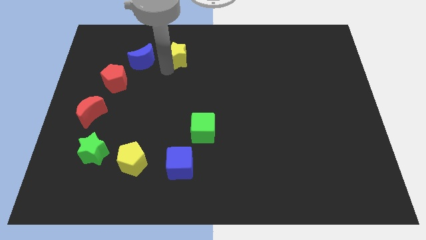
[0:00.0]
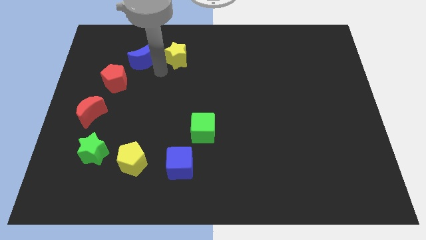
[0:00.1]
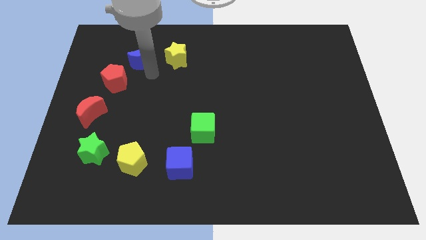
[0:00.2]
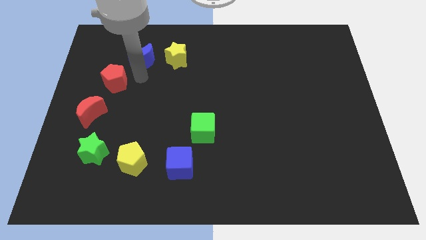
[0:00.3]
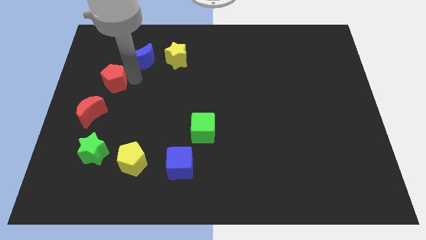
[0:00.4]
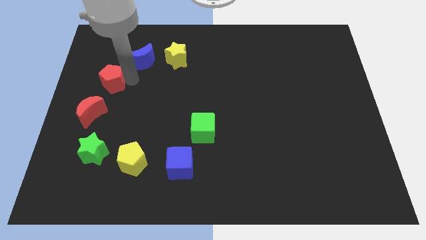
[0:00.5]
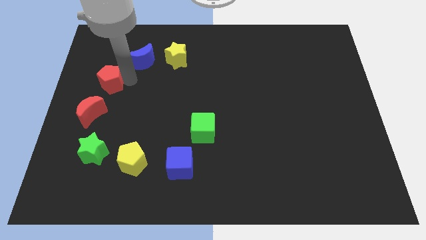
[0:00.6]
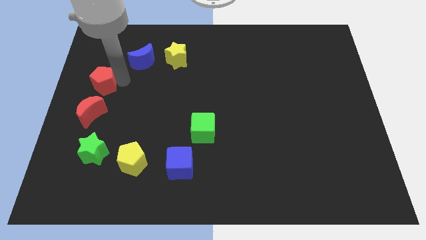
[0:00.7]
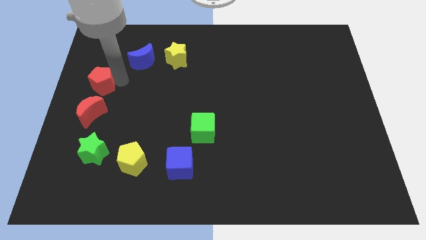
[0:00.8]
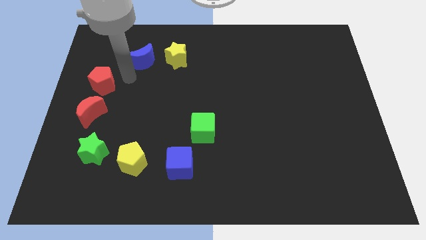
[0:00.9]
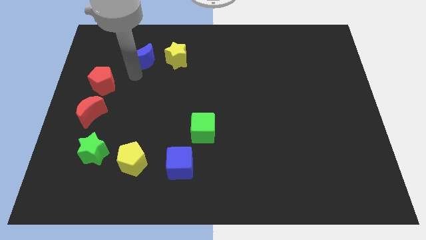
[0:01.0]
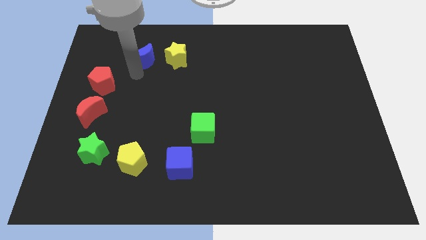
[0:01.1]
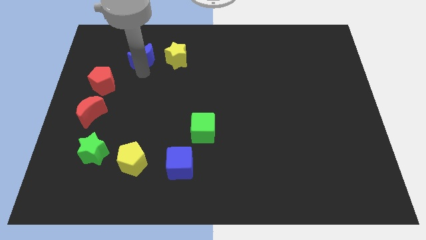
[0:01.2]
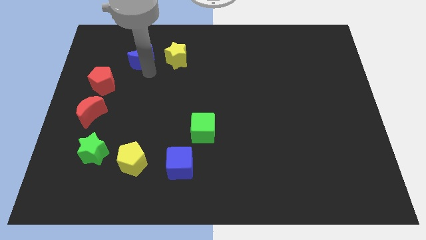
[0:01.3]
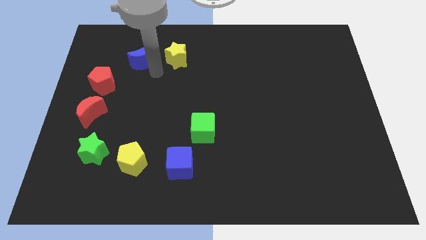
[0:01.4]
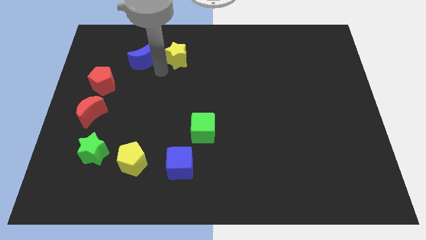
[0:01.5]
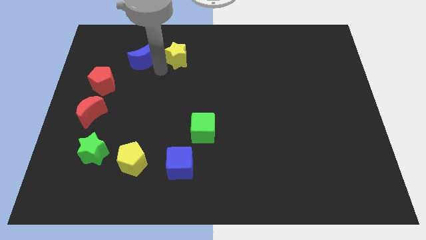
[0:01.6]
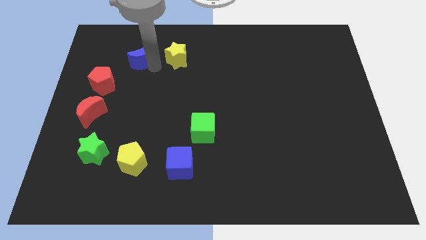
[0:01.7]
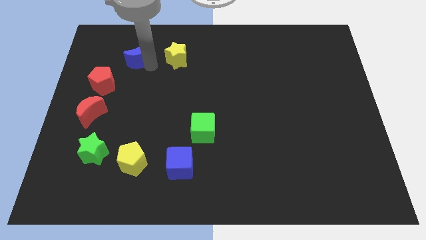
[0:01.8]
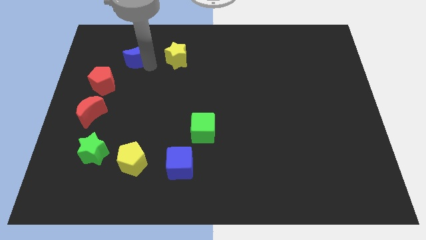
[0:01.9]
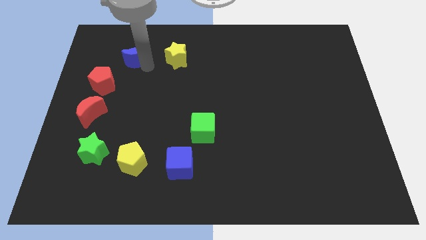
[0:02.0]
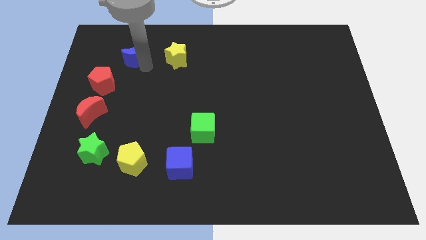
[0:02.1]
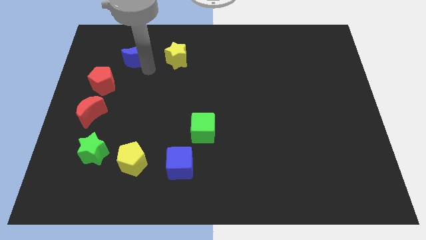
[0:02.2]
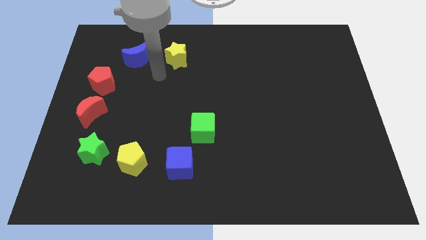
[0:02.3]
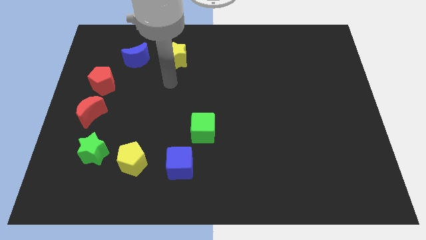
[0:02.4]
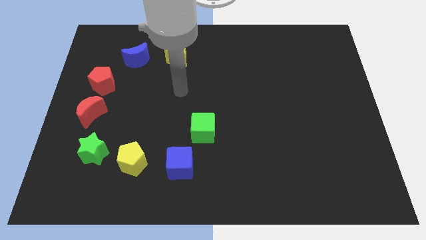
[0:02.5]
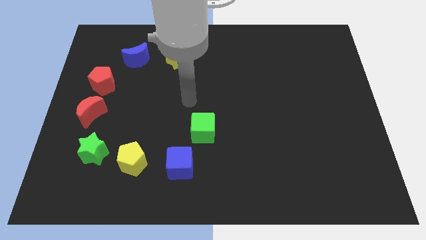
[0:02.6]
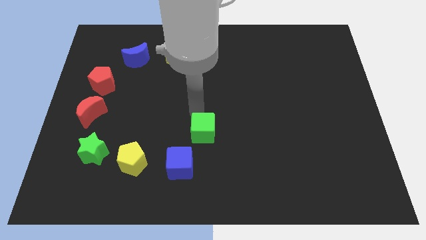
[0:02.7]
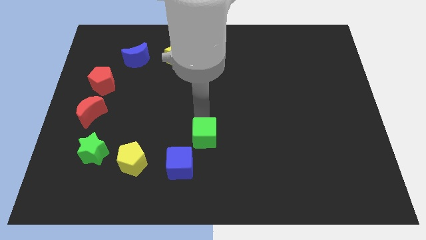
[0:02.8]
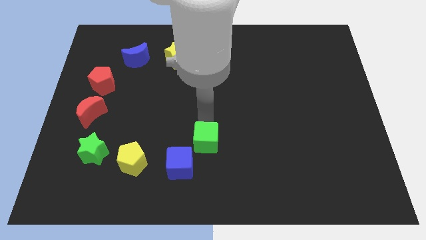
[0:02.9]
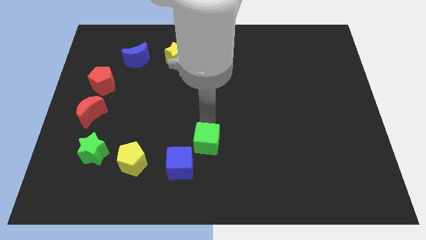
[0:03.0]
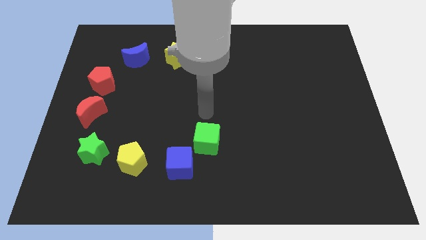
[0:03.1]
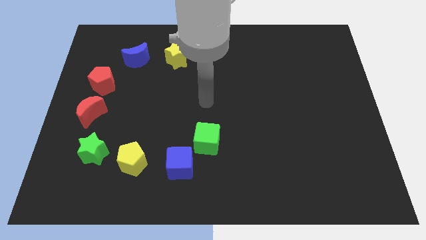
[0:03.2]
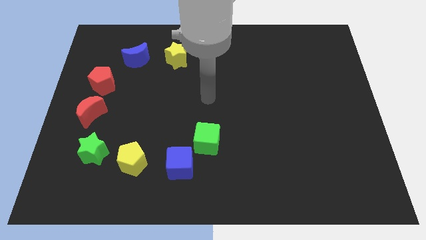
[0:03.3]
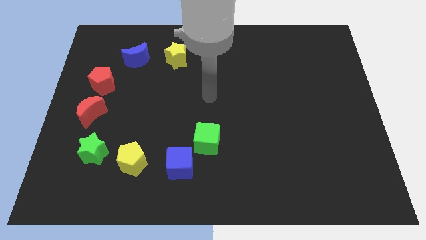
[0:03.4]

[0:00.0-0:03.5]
adjust the red pentagon blue moon and green cube to form a circle

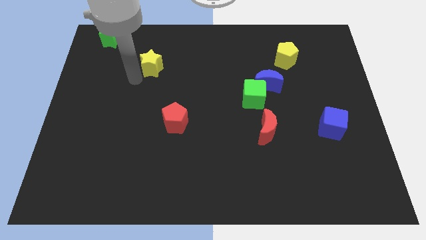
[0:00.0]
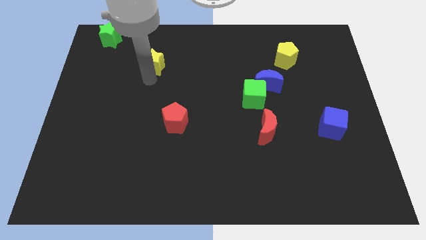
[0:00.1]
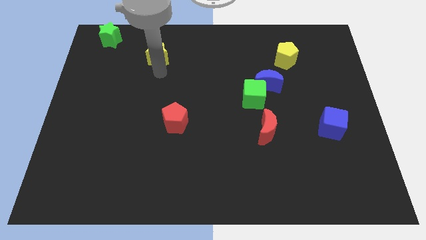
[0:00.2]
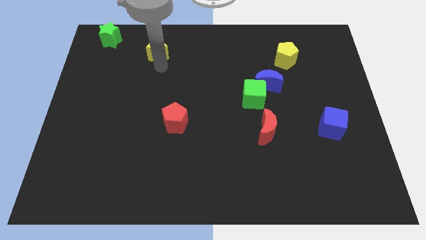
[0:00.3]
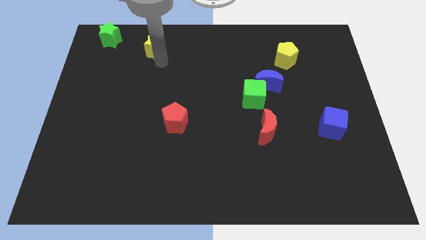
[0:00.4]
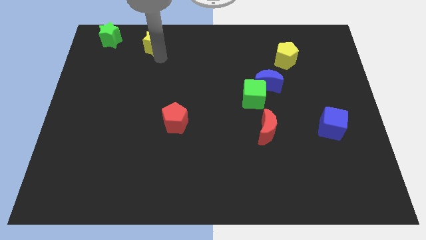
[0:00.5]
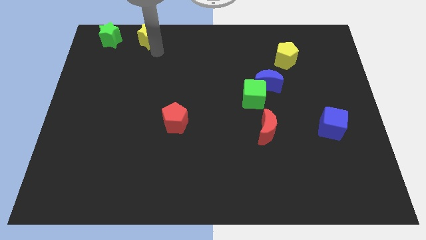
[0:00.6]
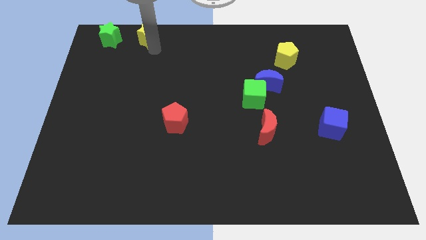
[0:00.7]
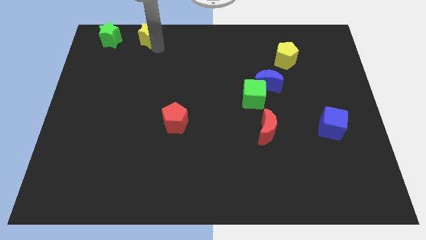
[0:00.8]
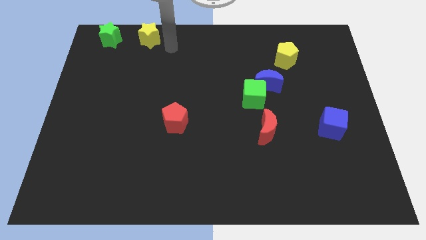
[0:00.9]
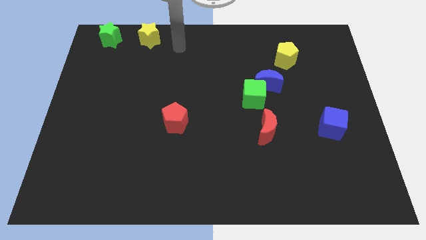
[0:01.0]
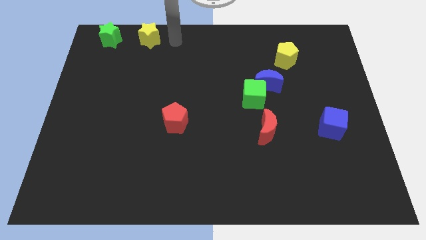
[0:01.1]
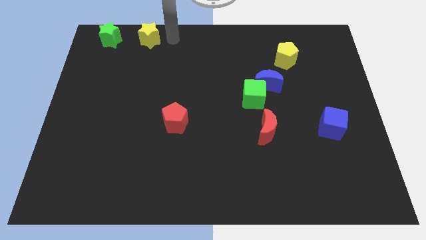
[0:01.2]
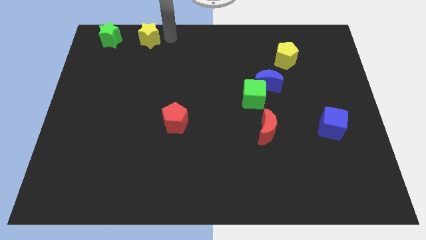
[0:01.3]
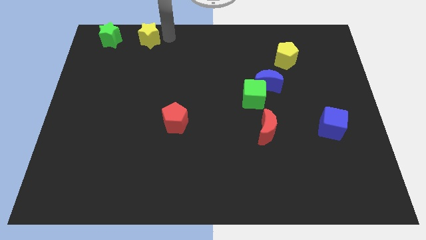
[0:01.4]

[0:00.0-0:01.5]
place the yellow star parallel to the green star

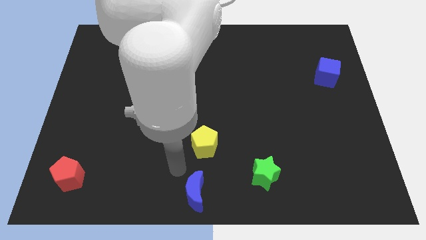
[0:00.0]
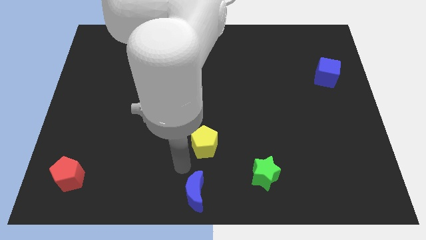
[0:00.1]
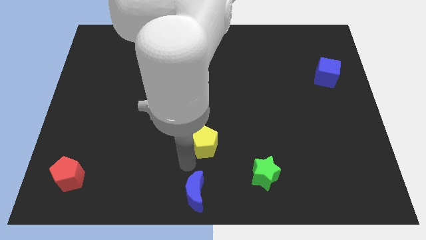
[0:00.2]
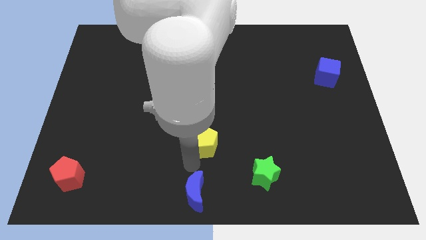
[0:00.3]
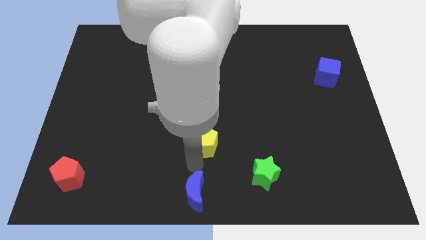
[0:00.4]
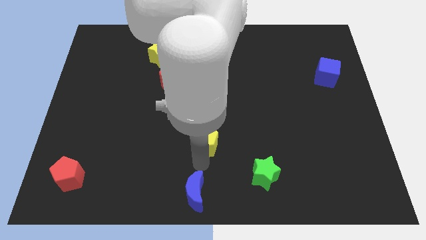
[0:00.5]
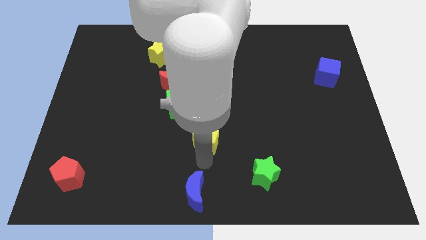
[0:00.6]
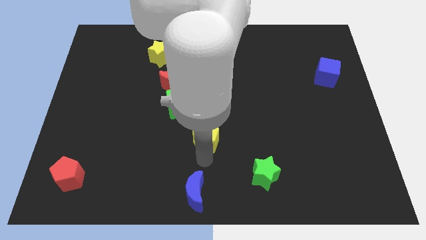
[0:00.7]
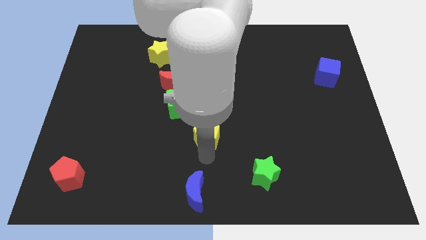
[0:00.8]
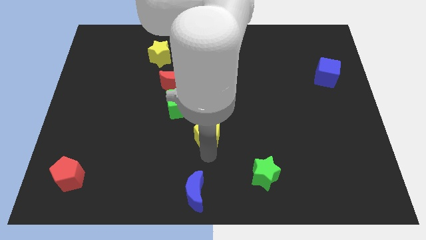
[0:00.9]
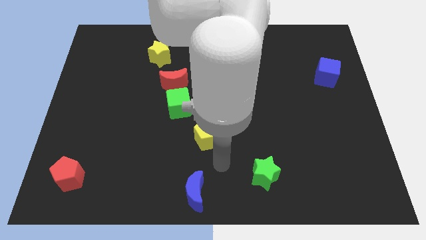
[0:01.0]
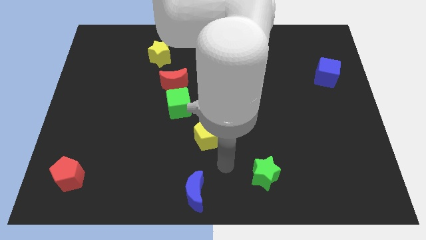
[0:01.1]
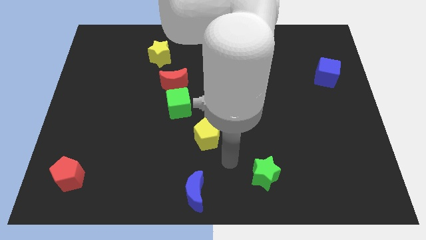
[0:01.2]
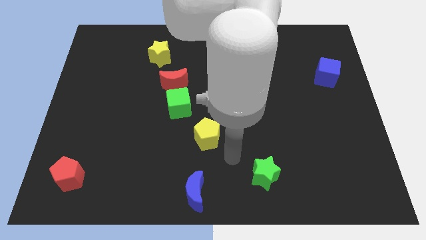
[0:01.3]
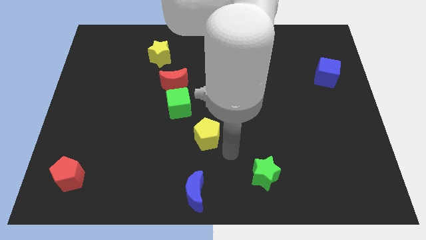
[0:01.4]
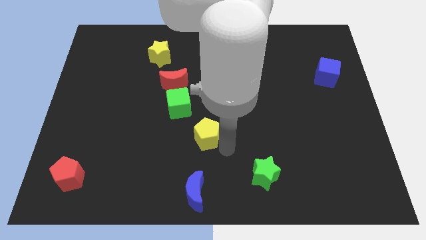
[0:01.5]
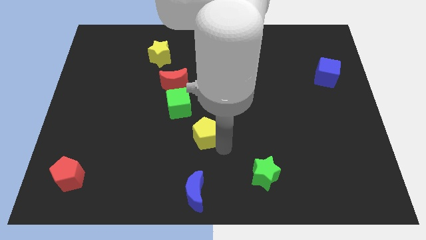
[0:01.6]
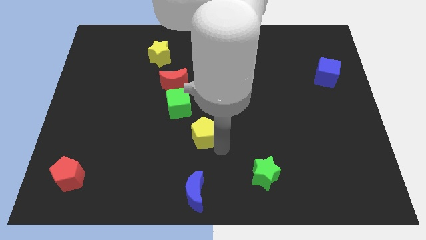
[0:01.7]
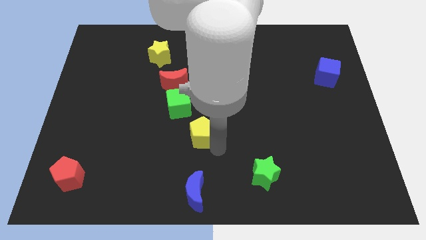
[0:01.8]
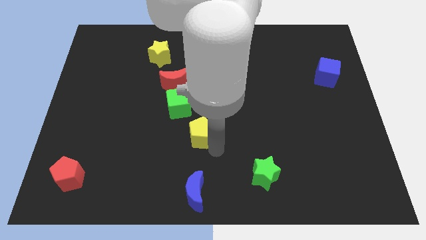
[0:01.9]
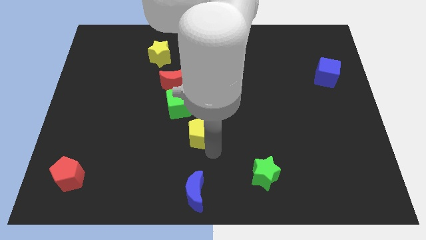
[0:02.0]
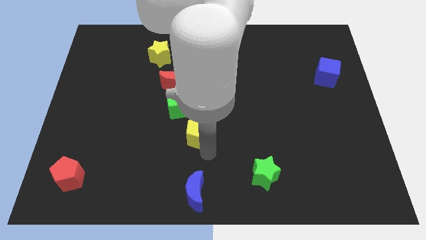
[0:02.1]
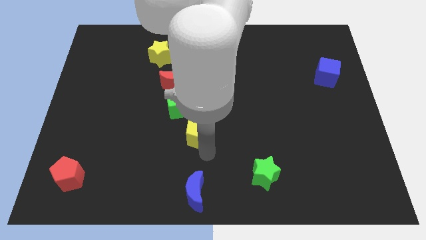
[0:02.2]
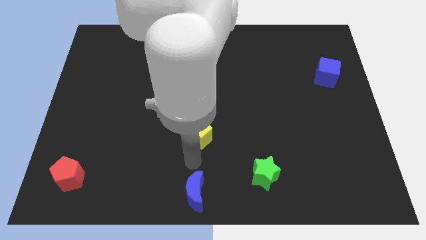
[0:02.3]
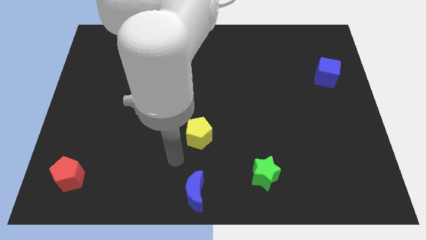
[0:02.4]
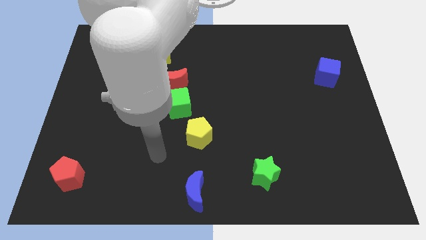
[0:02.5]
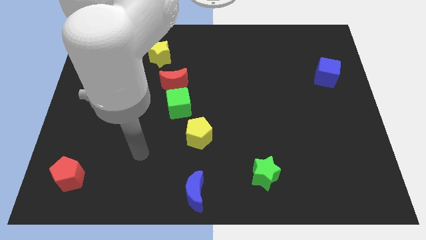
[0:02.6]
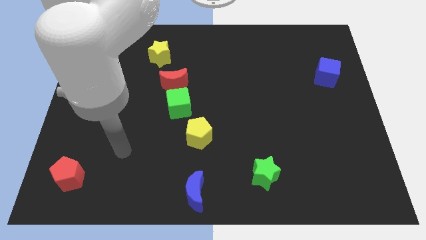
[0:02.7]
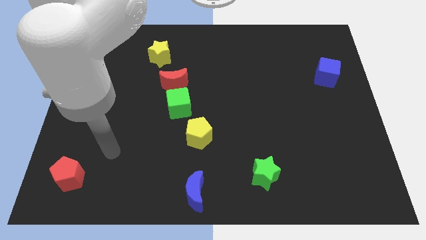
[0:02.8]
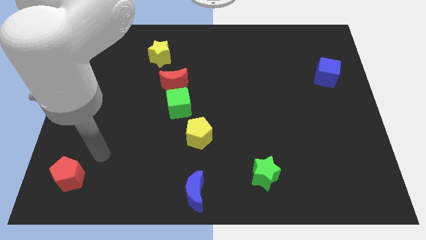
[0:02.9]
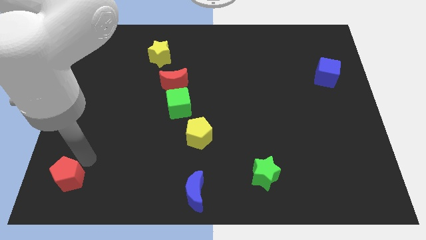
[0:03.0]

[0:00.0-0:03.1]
move yellow pentagon slightly upwards

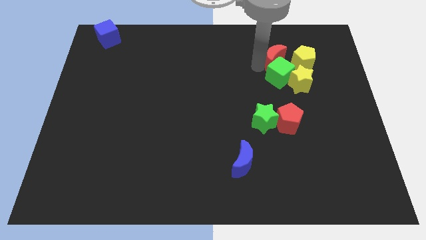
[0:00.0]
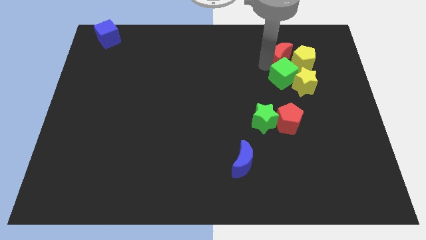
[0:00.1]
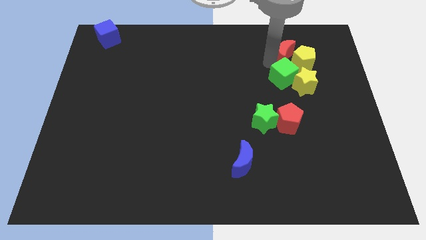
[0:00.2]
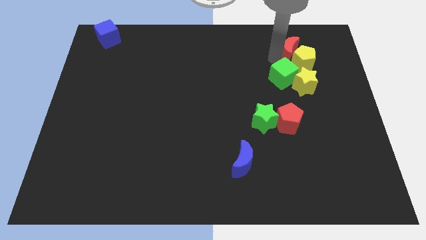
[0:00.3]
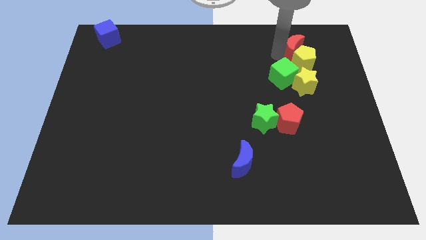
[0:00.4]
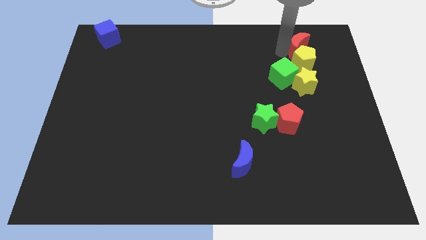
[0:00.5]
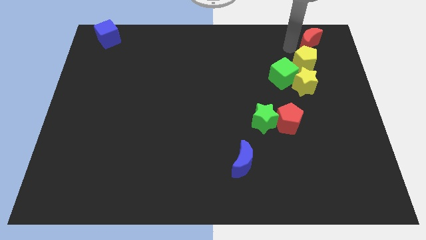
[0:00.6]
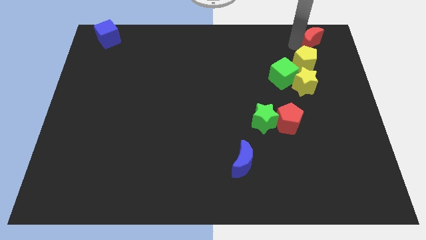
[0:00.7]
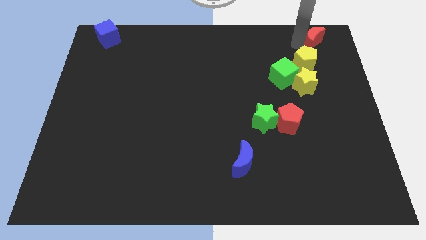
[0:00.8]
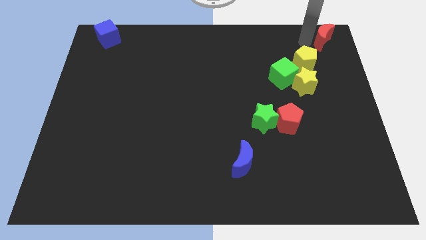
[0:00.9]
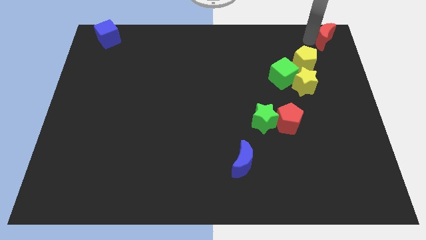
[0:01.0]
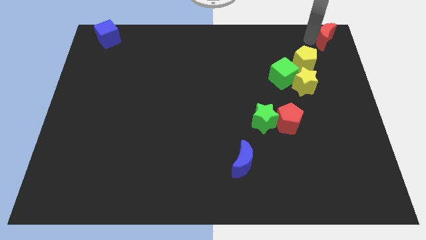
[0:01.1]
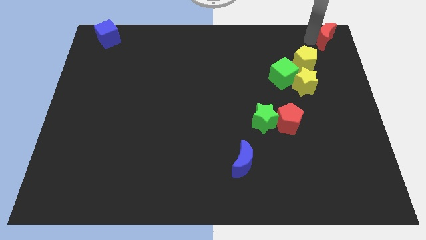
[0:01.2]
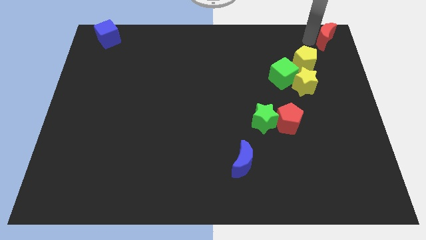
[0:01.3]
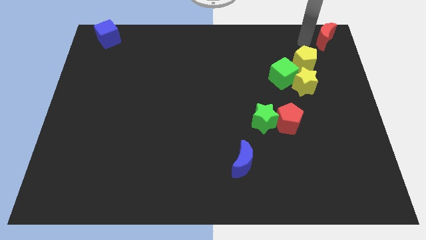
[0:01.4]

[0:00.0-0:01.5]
push the red crescent to the top right corner of the board
